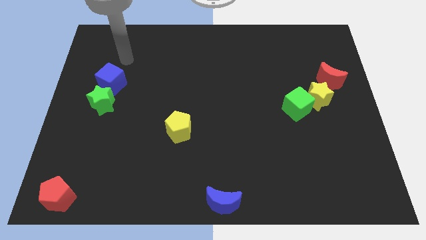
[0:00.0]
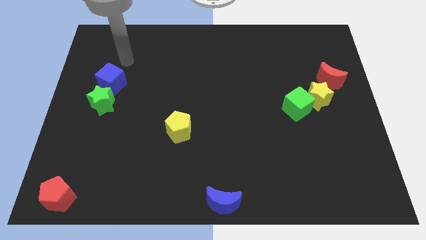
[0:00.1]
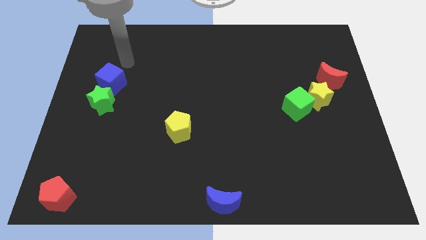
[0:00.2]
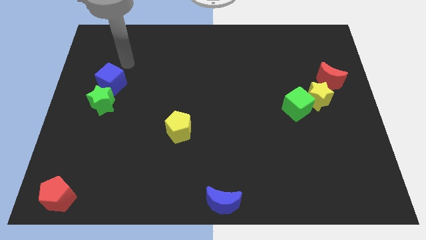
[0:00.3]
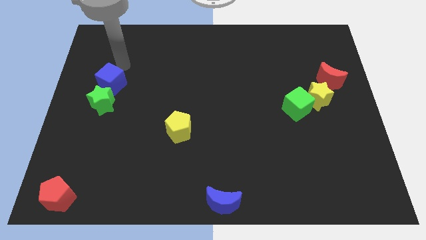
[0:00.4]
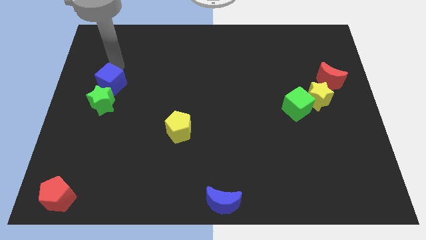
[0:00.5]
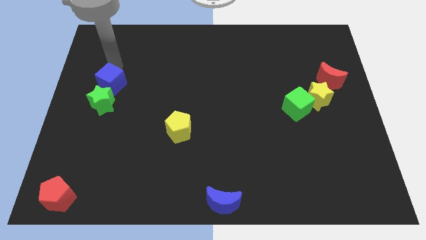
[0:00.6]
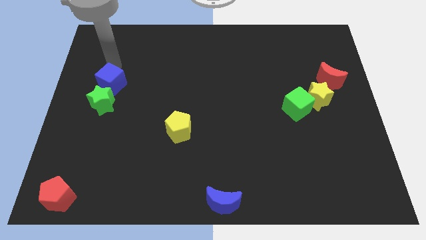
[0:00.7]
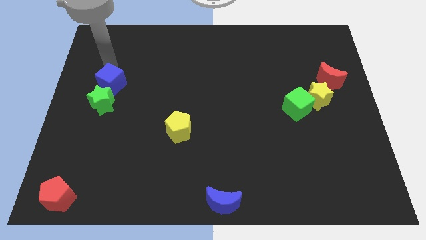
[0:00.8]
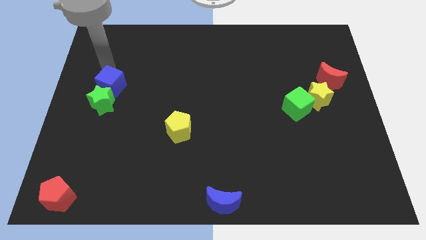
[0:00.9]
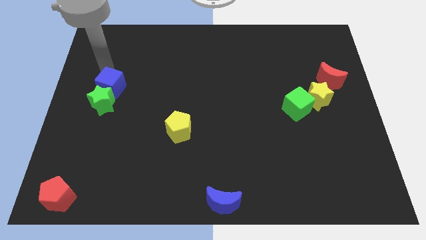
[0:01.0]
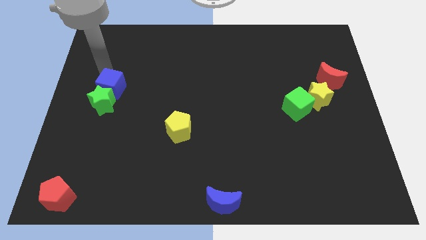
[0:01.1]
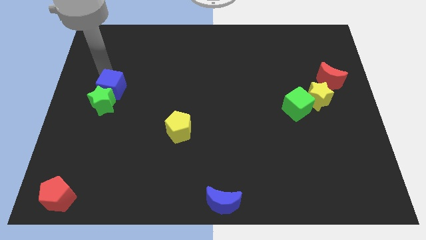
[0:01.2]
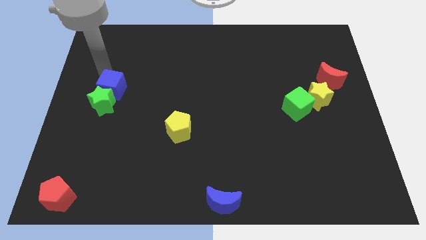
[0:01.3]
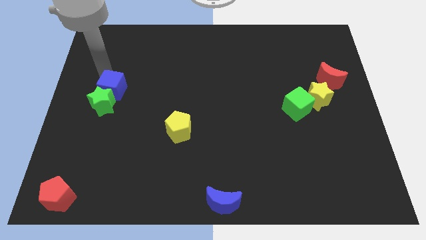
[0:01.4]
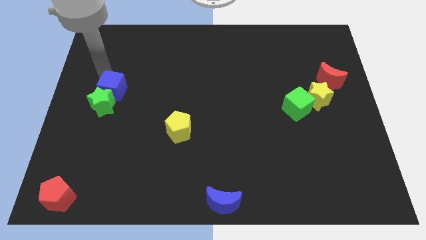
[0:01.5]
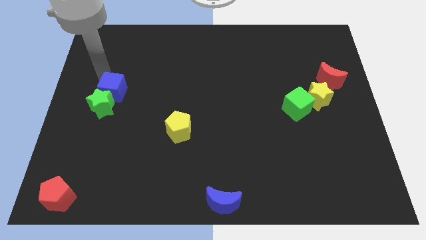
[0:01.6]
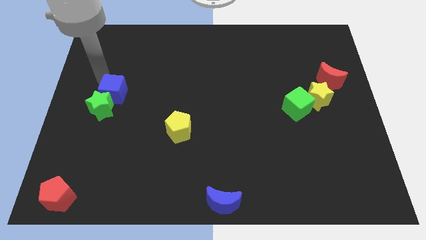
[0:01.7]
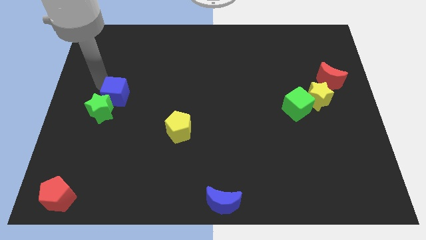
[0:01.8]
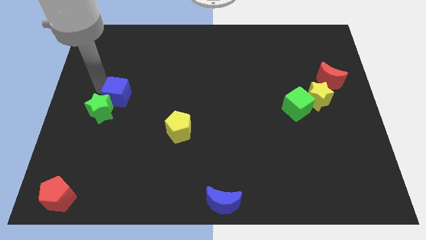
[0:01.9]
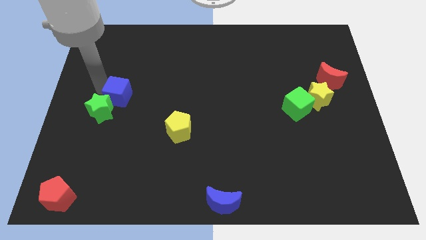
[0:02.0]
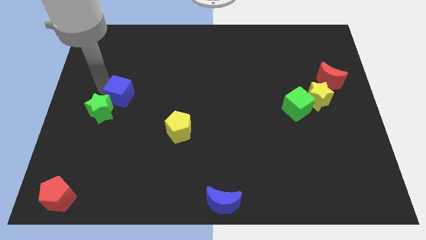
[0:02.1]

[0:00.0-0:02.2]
push the blue cube into the green star

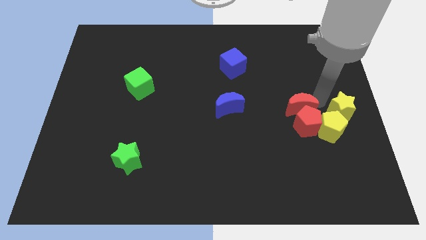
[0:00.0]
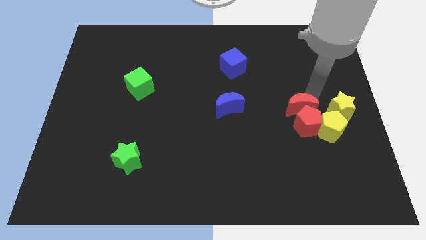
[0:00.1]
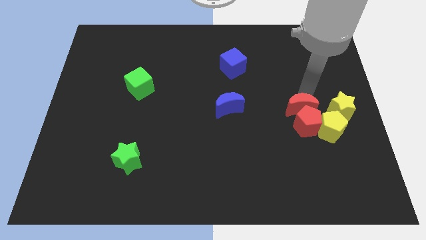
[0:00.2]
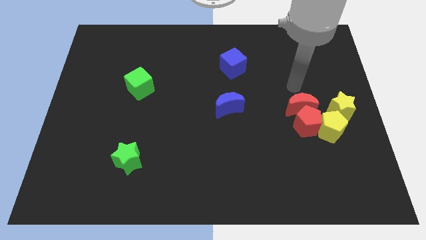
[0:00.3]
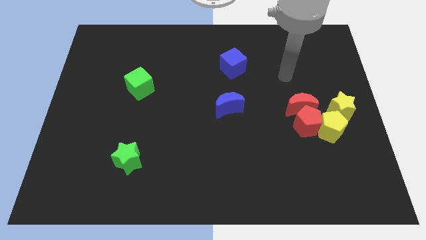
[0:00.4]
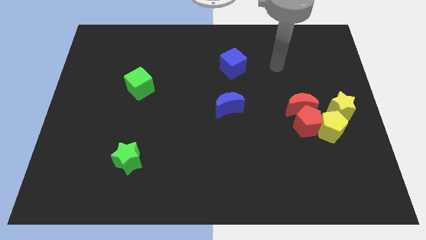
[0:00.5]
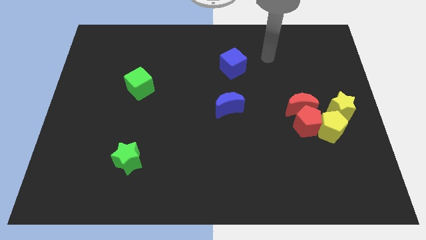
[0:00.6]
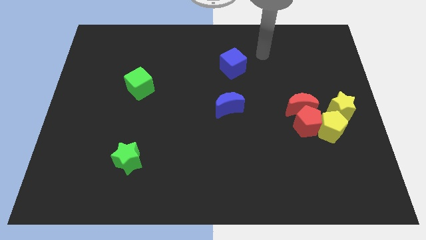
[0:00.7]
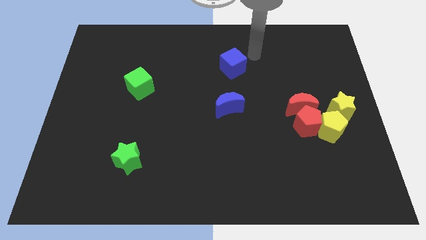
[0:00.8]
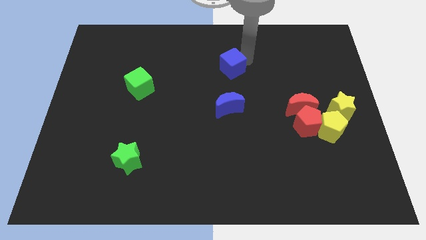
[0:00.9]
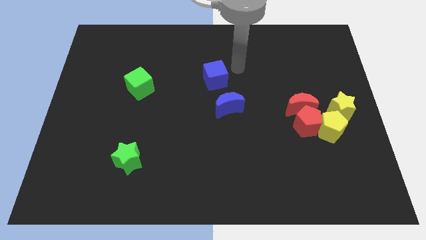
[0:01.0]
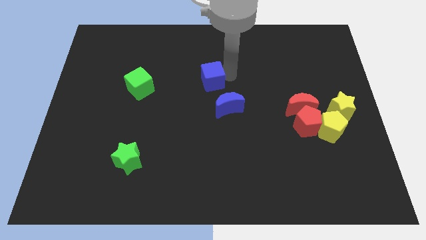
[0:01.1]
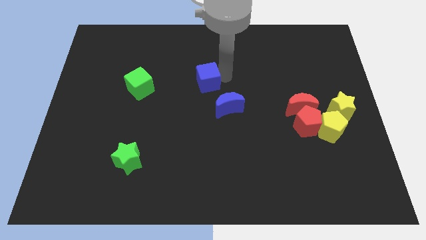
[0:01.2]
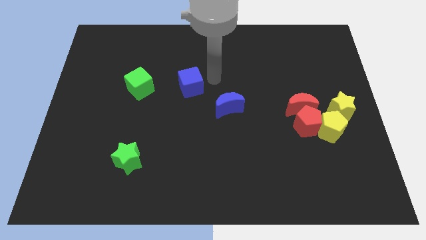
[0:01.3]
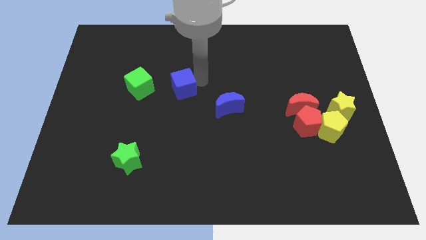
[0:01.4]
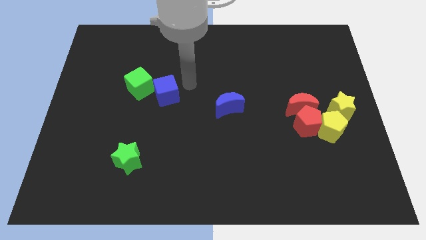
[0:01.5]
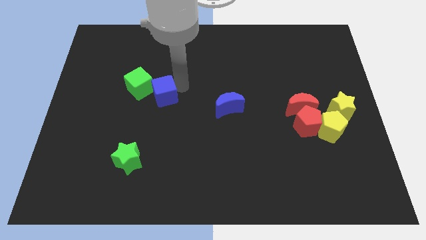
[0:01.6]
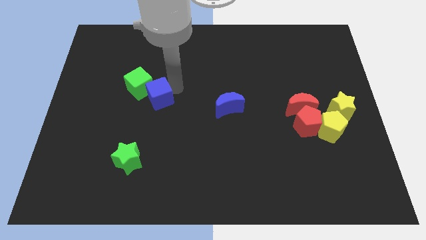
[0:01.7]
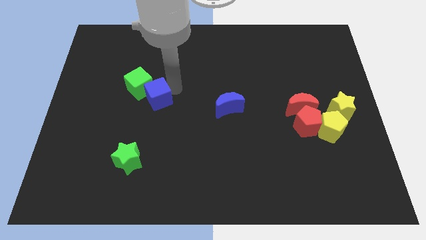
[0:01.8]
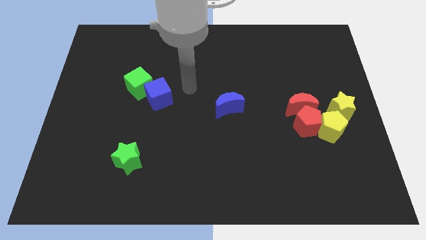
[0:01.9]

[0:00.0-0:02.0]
move the blue cube to the right of the green cube

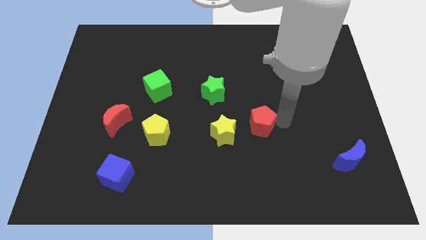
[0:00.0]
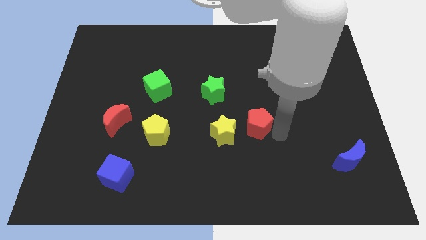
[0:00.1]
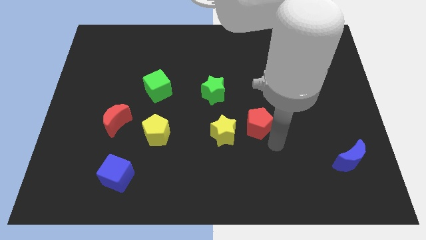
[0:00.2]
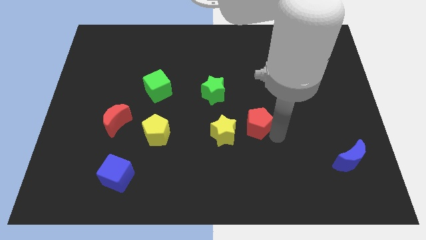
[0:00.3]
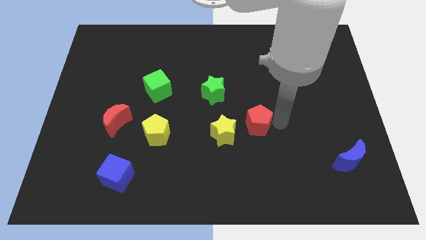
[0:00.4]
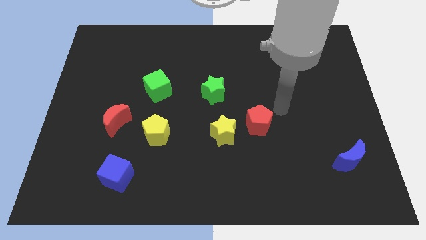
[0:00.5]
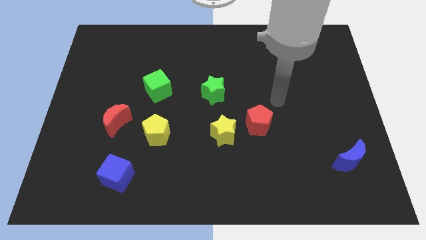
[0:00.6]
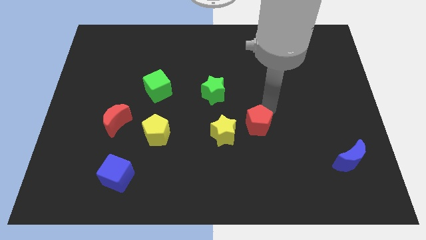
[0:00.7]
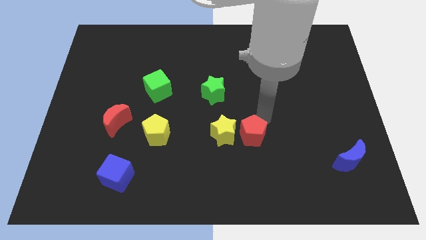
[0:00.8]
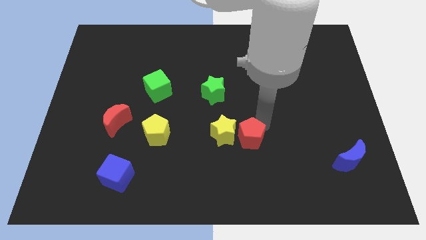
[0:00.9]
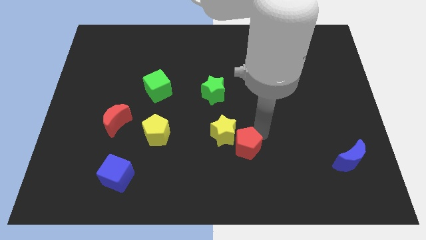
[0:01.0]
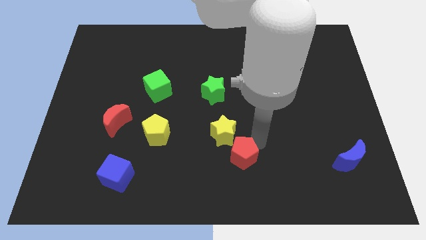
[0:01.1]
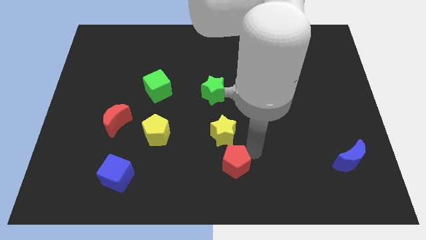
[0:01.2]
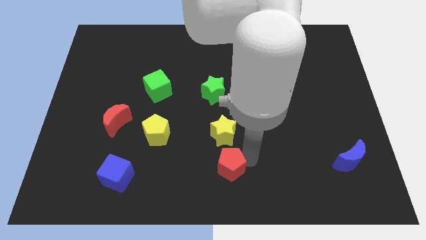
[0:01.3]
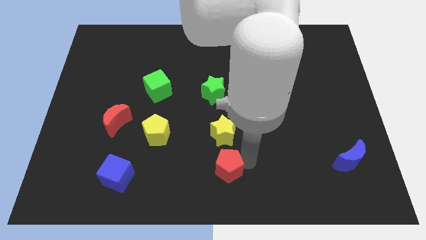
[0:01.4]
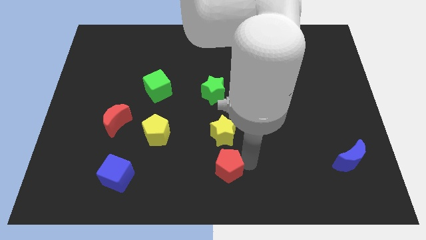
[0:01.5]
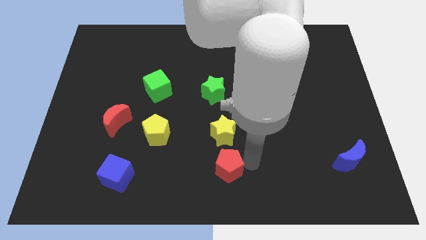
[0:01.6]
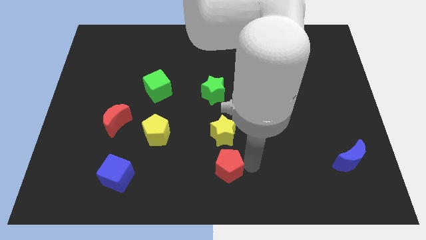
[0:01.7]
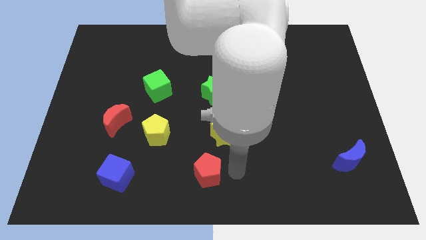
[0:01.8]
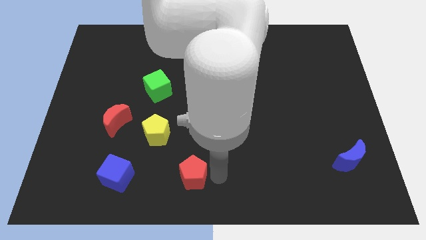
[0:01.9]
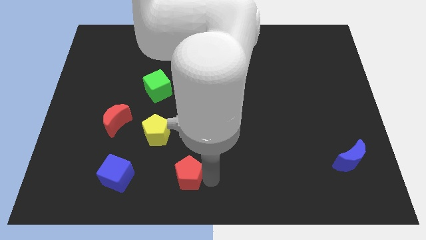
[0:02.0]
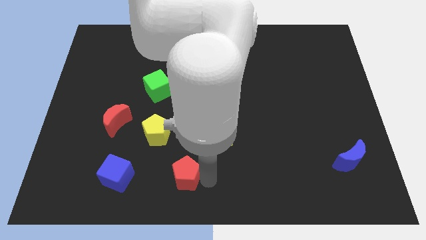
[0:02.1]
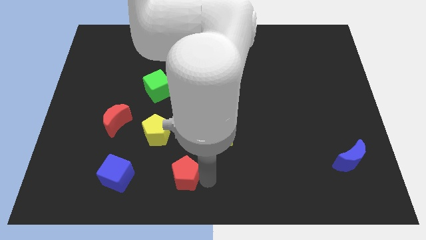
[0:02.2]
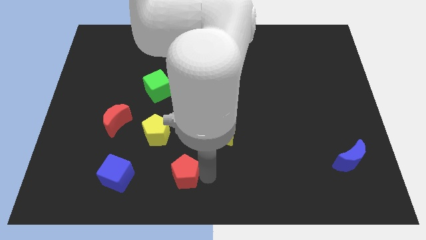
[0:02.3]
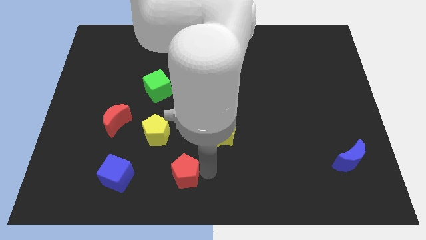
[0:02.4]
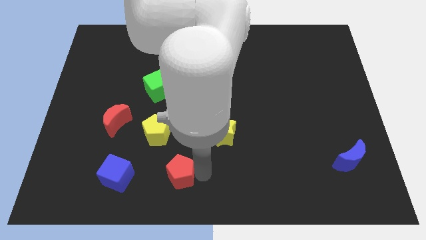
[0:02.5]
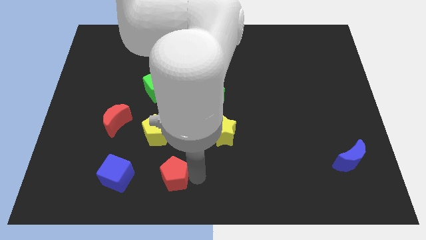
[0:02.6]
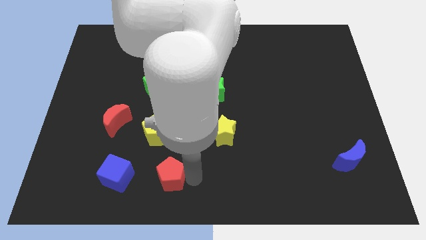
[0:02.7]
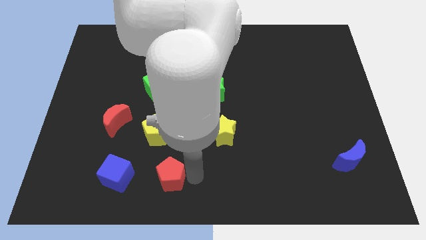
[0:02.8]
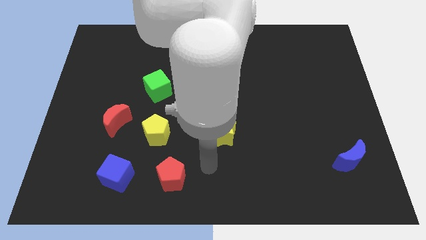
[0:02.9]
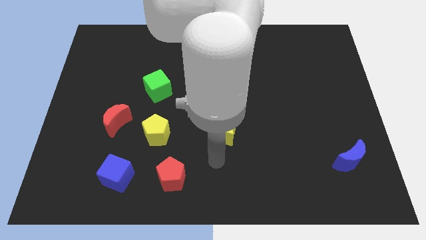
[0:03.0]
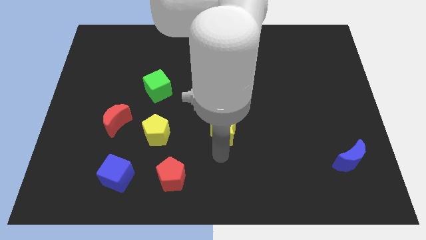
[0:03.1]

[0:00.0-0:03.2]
place the red pentagon parallel to the blue cube

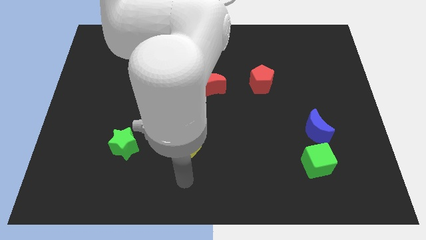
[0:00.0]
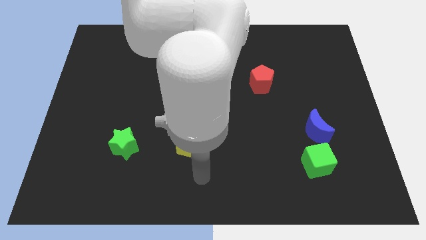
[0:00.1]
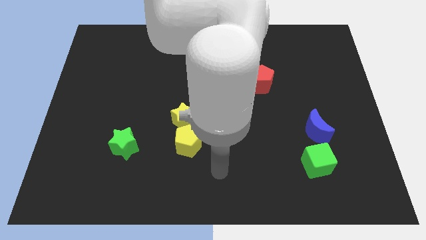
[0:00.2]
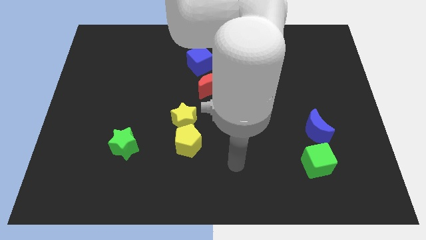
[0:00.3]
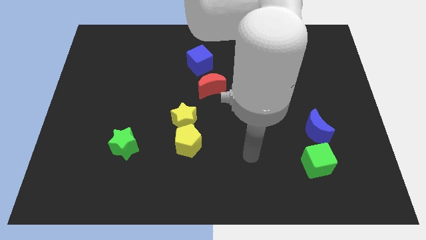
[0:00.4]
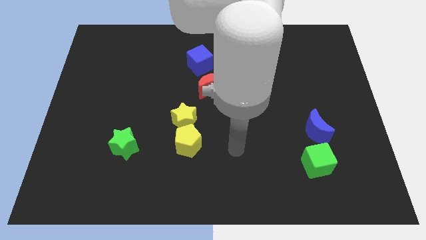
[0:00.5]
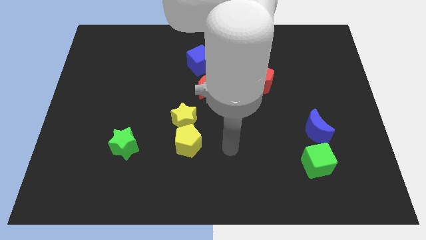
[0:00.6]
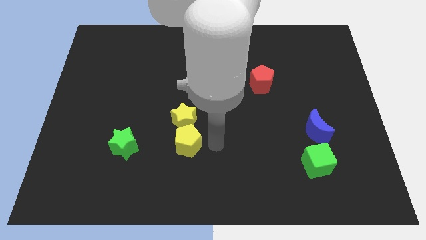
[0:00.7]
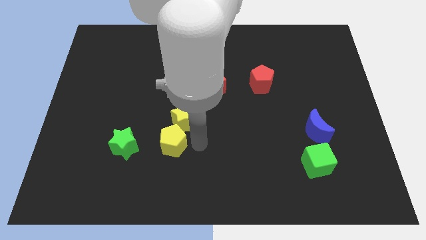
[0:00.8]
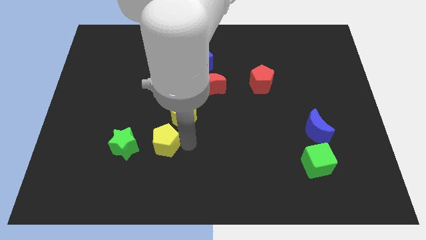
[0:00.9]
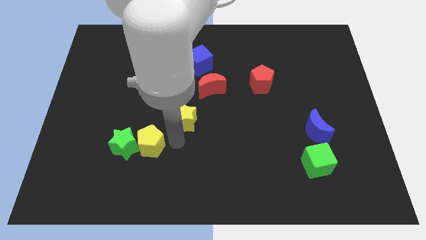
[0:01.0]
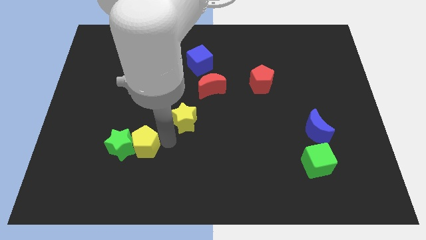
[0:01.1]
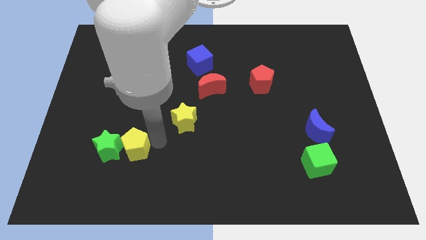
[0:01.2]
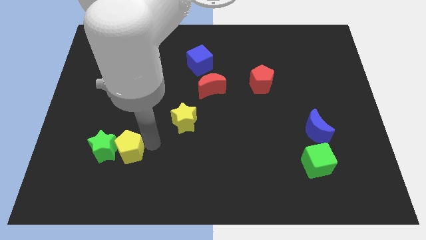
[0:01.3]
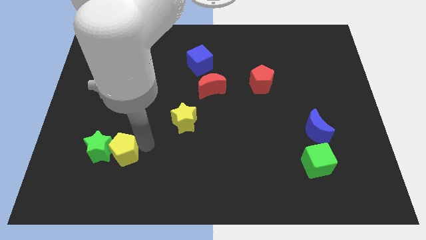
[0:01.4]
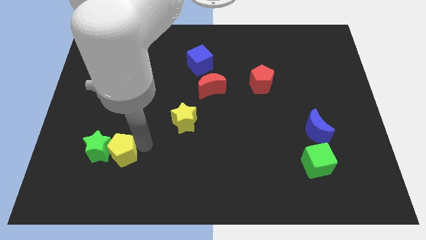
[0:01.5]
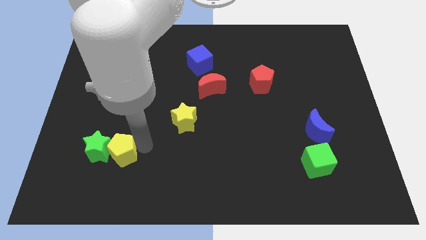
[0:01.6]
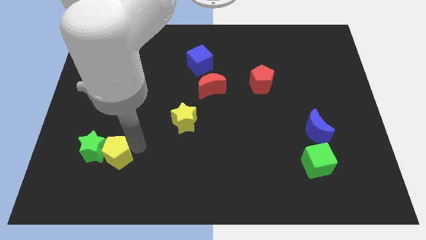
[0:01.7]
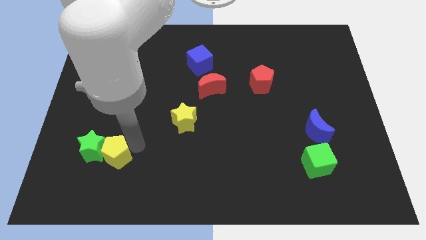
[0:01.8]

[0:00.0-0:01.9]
push the yellow pentagon into the right side of the green star
